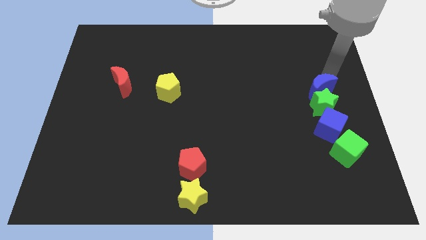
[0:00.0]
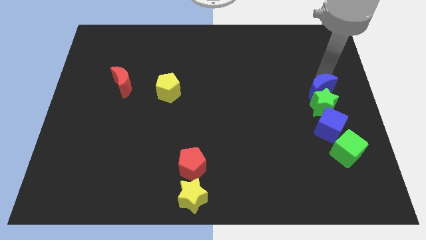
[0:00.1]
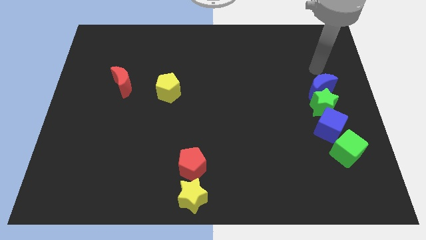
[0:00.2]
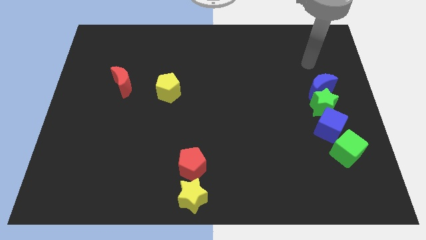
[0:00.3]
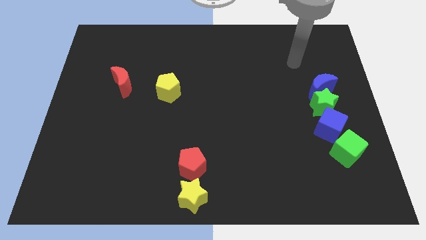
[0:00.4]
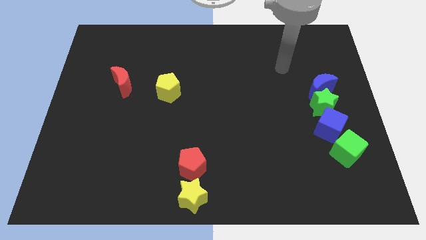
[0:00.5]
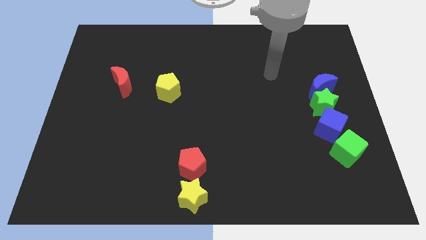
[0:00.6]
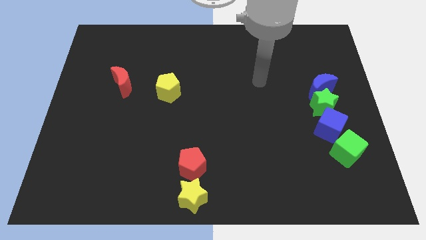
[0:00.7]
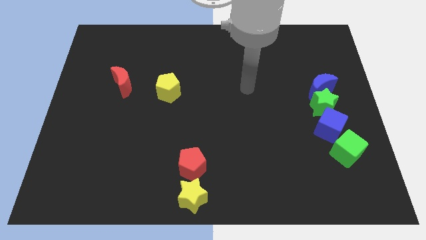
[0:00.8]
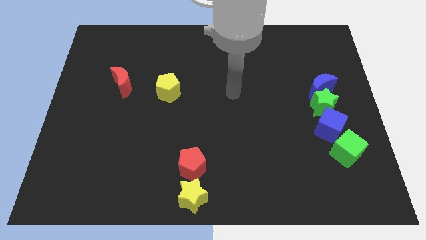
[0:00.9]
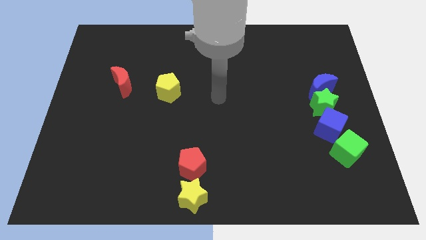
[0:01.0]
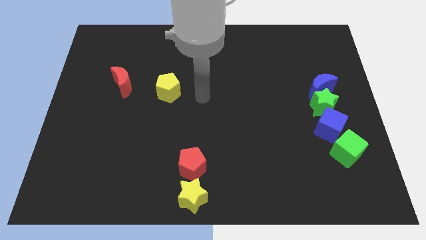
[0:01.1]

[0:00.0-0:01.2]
move the arm to the center of the board

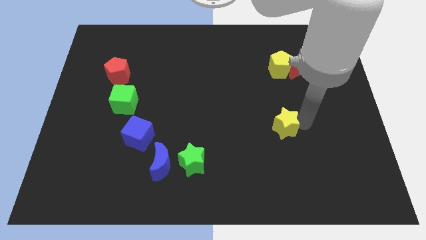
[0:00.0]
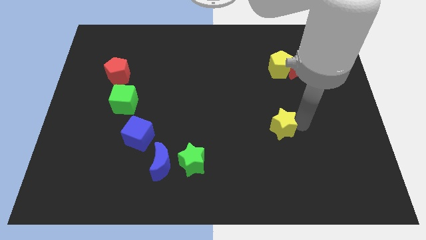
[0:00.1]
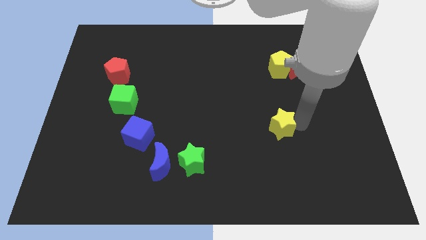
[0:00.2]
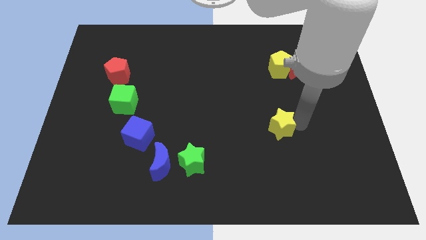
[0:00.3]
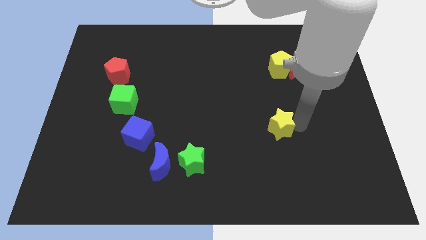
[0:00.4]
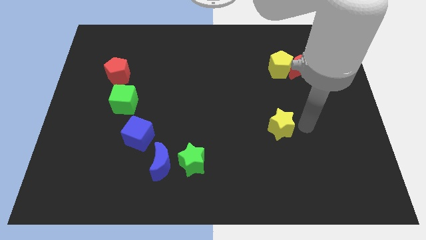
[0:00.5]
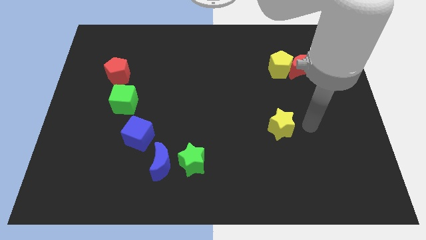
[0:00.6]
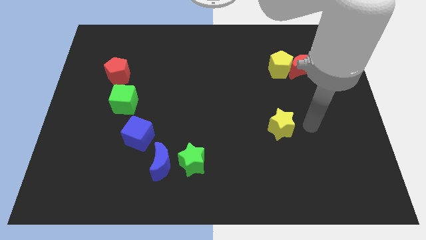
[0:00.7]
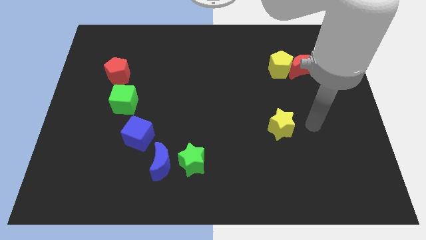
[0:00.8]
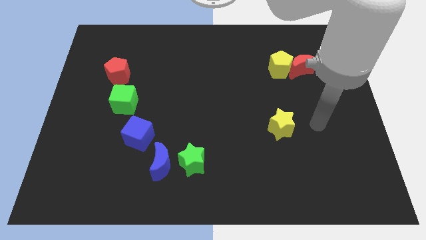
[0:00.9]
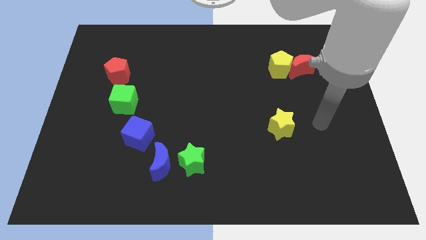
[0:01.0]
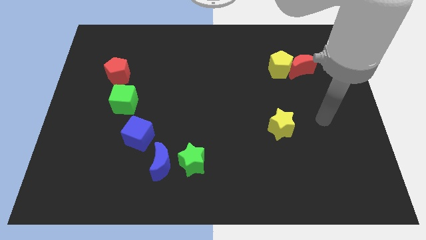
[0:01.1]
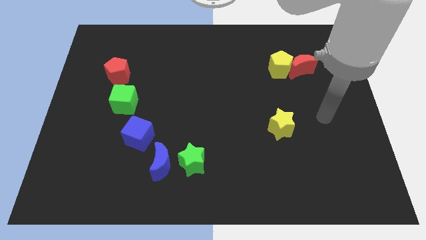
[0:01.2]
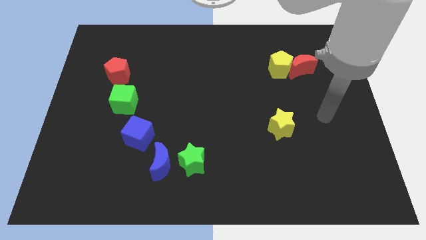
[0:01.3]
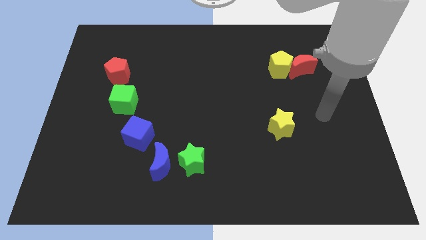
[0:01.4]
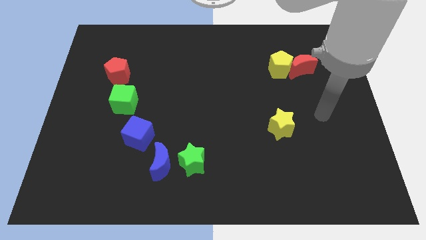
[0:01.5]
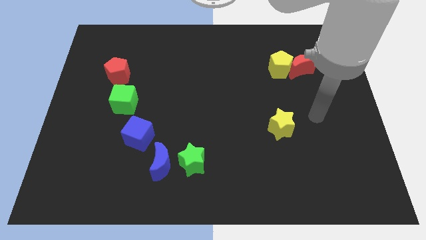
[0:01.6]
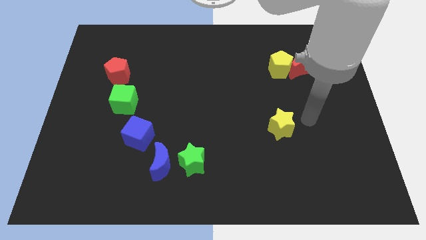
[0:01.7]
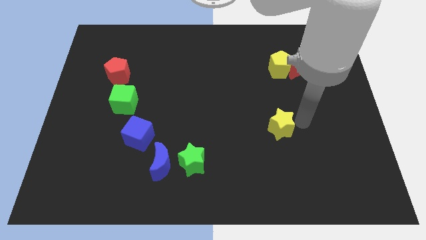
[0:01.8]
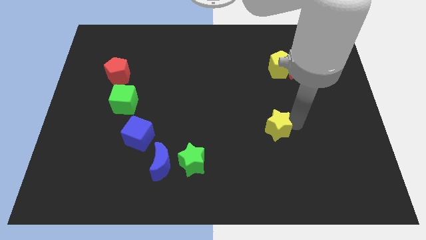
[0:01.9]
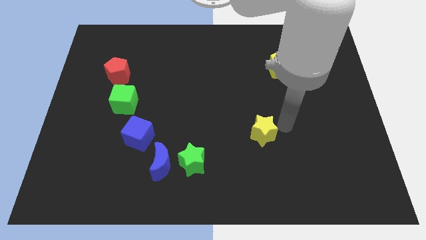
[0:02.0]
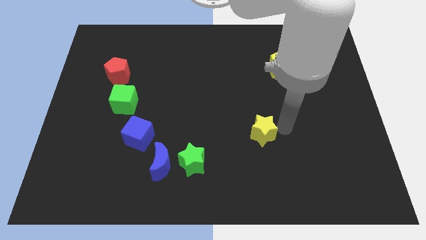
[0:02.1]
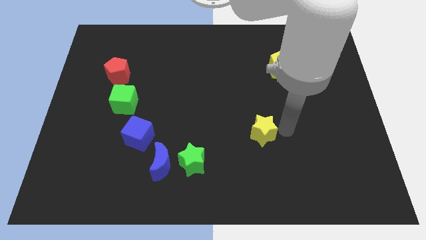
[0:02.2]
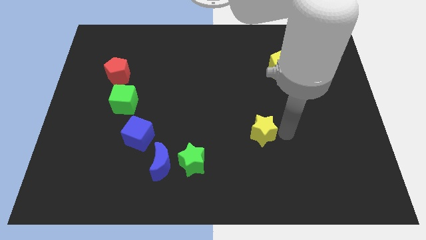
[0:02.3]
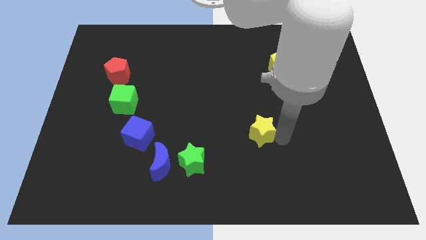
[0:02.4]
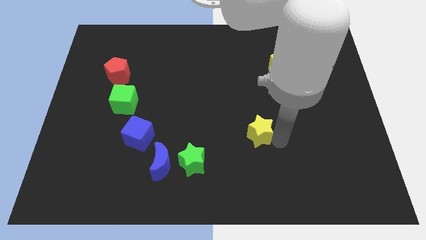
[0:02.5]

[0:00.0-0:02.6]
push yellow star slightly to the left side

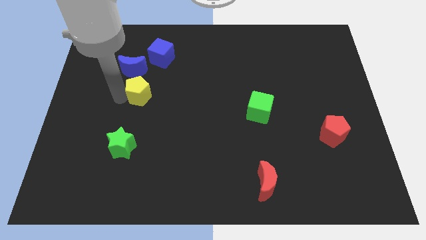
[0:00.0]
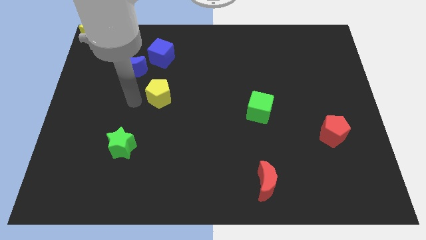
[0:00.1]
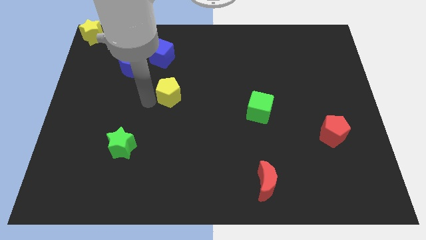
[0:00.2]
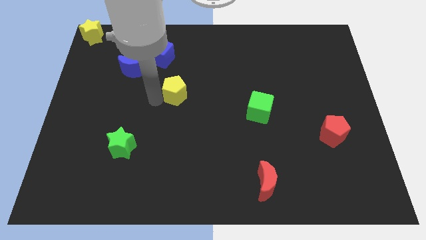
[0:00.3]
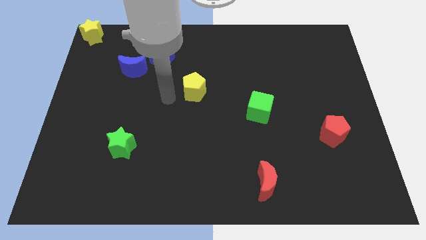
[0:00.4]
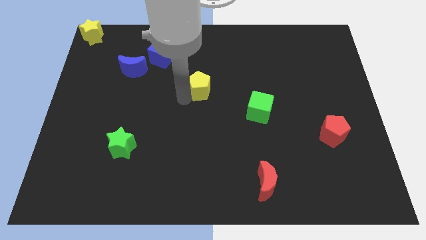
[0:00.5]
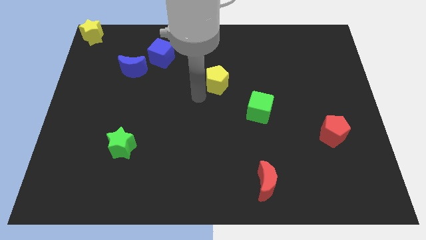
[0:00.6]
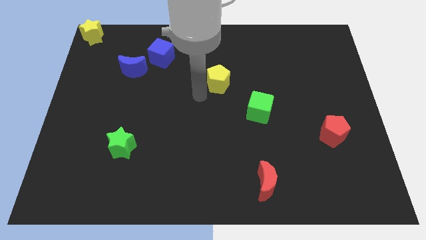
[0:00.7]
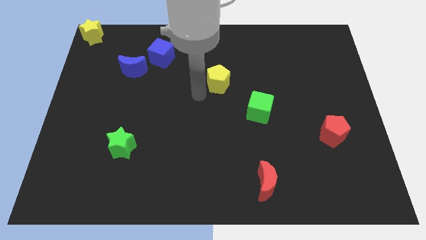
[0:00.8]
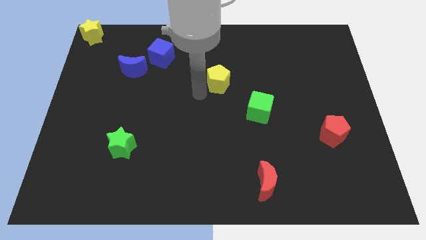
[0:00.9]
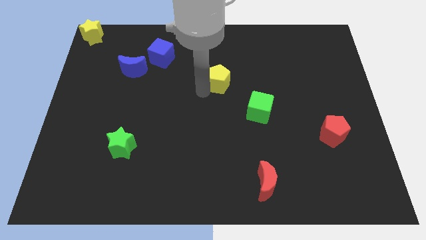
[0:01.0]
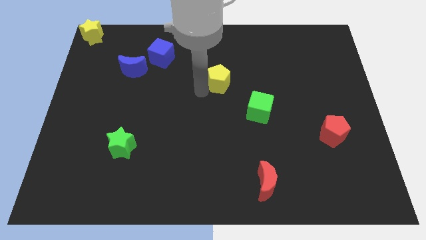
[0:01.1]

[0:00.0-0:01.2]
push the yellow pentagon diagonal to the green cube

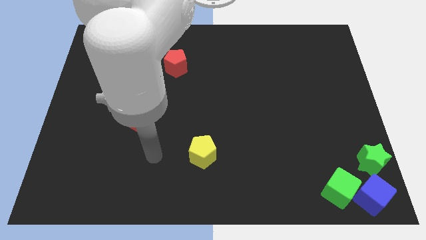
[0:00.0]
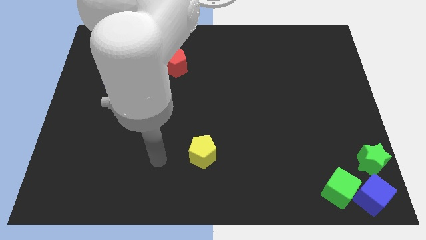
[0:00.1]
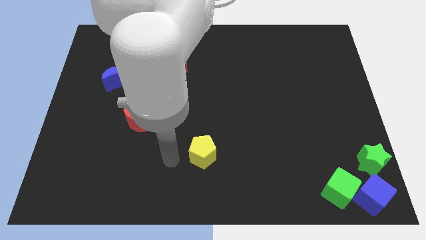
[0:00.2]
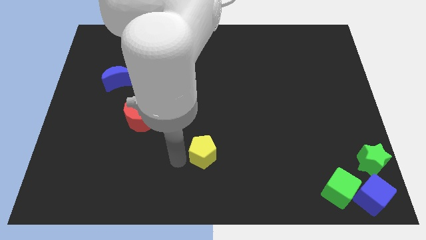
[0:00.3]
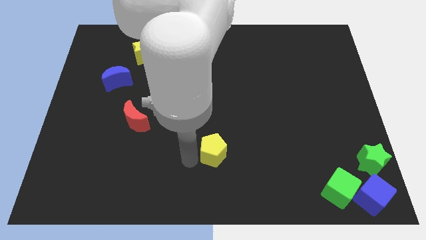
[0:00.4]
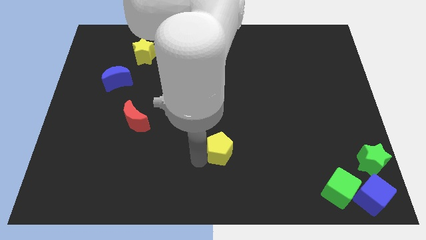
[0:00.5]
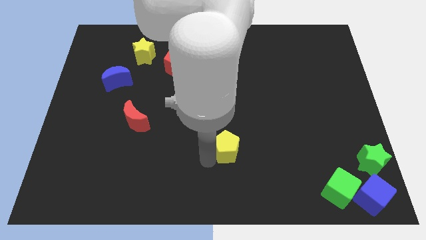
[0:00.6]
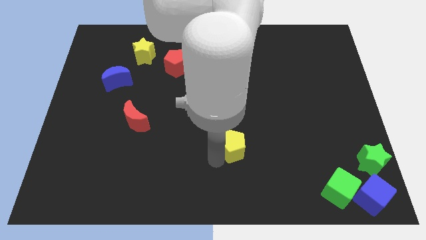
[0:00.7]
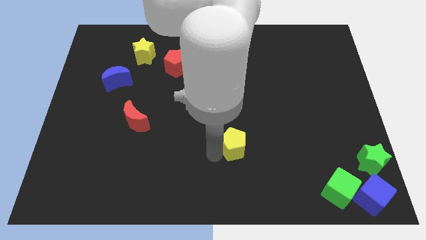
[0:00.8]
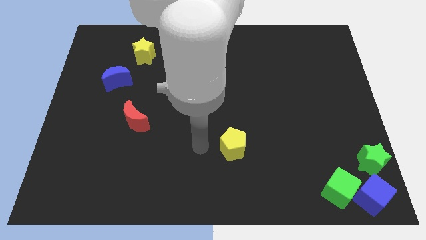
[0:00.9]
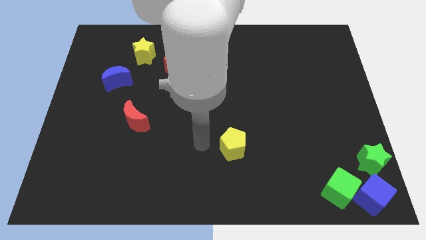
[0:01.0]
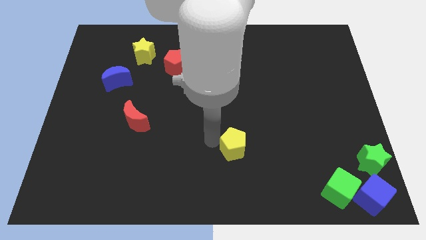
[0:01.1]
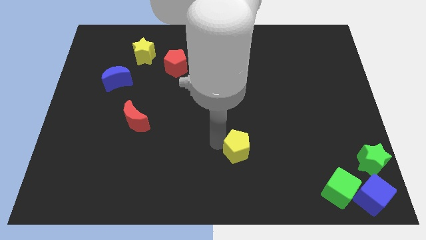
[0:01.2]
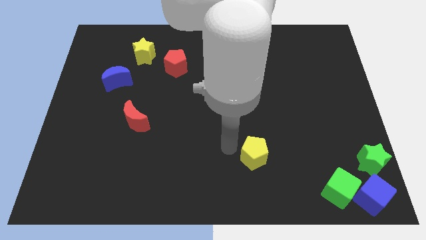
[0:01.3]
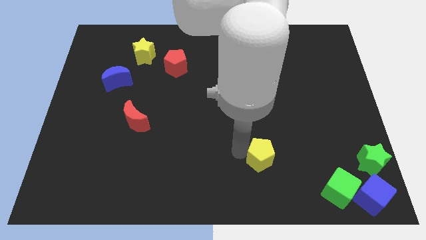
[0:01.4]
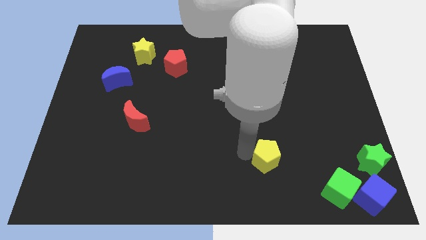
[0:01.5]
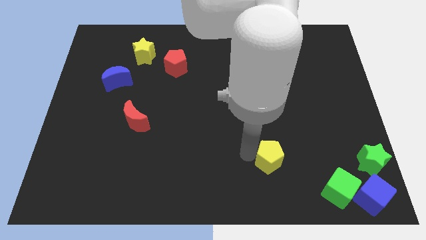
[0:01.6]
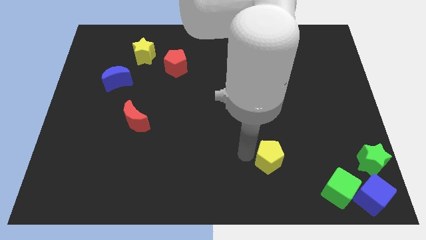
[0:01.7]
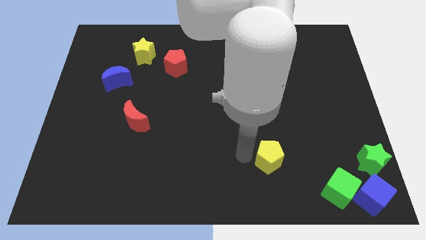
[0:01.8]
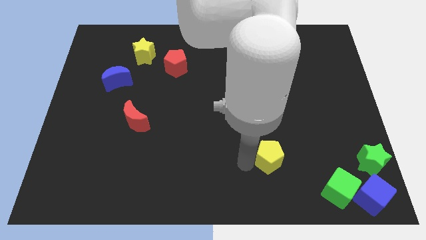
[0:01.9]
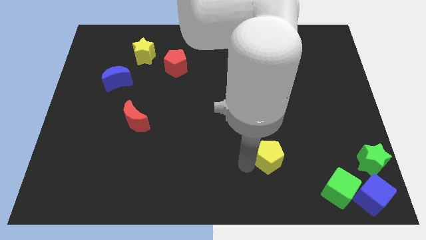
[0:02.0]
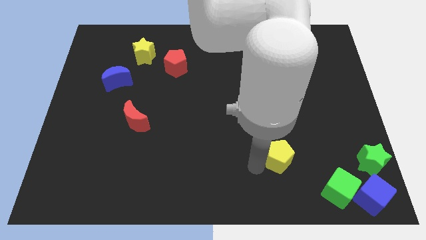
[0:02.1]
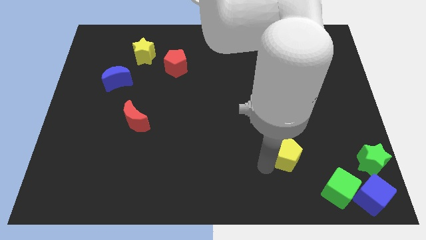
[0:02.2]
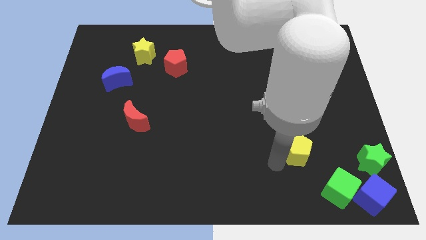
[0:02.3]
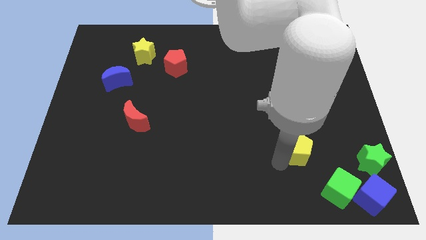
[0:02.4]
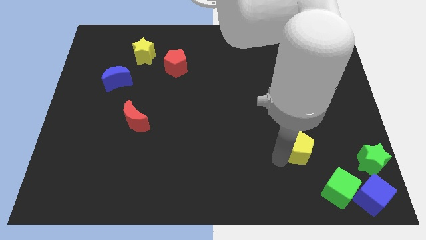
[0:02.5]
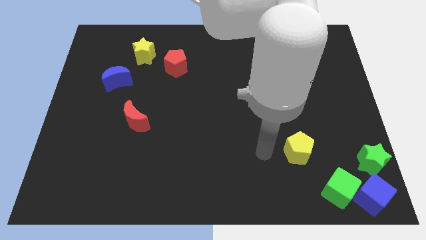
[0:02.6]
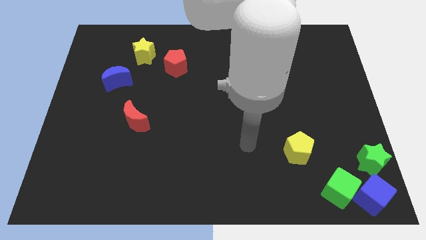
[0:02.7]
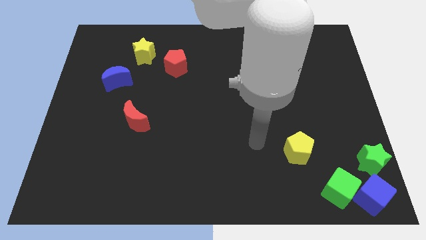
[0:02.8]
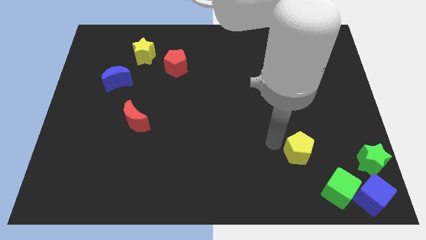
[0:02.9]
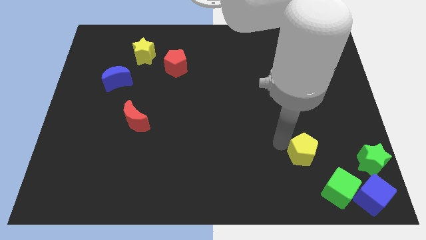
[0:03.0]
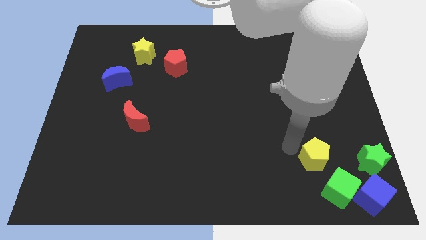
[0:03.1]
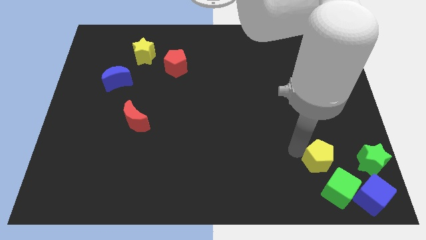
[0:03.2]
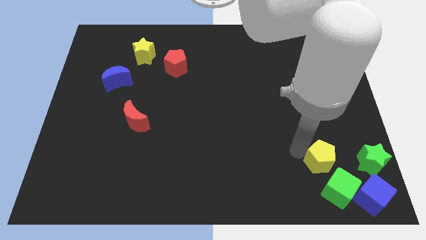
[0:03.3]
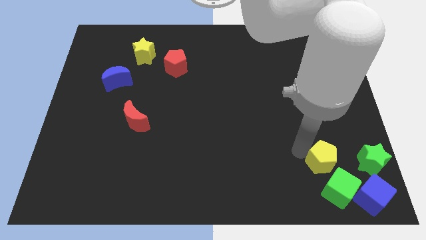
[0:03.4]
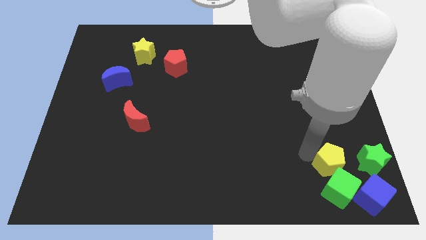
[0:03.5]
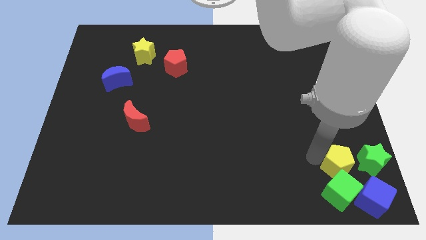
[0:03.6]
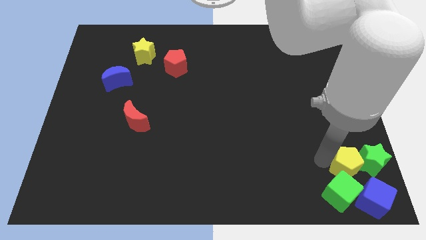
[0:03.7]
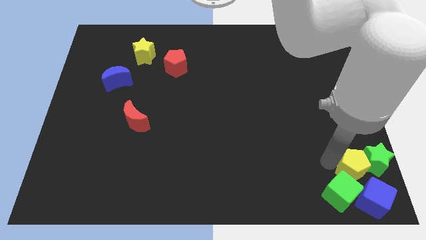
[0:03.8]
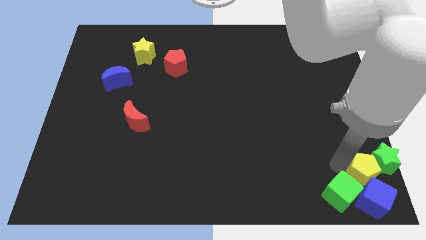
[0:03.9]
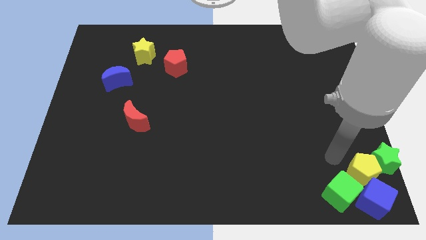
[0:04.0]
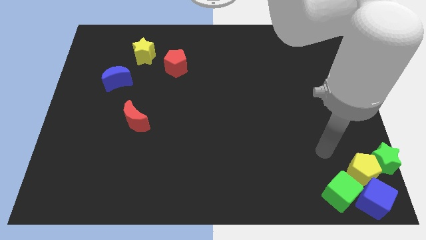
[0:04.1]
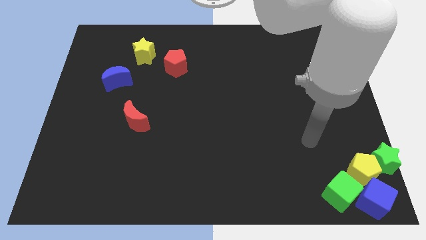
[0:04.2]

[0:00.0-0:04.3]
push the yellow pentagon into green star
